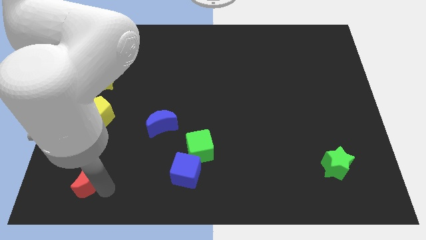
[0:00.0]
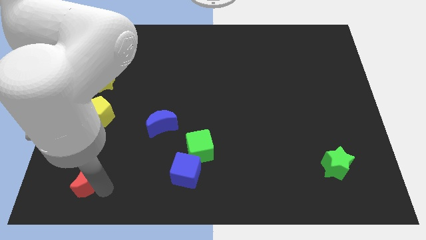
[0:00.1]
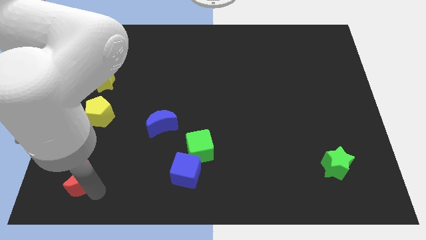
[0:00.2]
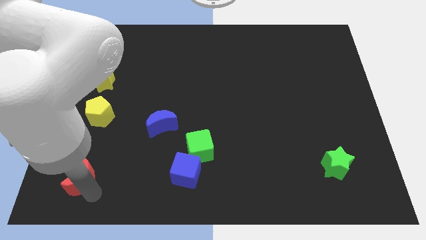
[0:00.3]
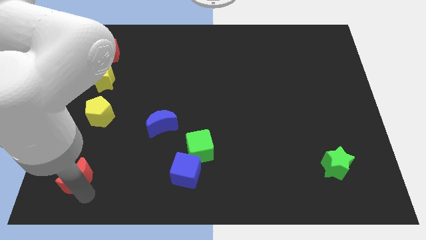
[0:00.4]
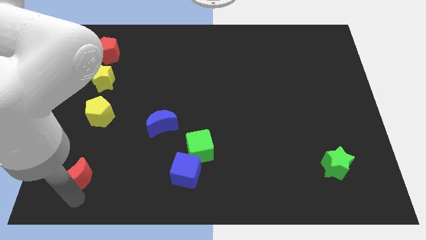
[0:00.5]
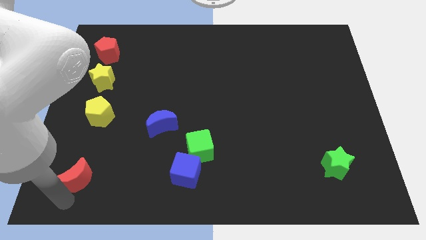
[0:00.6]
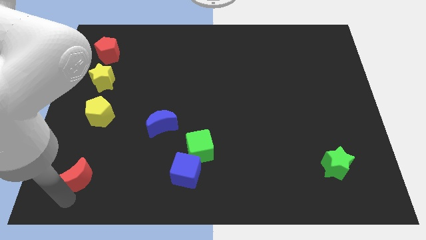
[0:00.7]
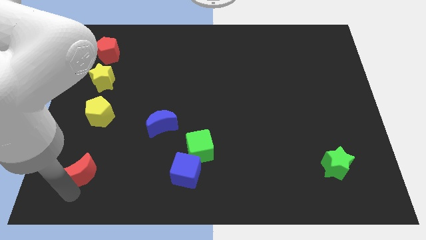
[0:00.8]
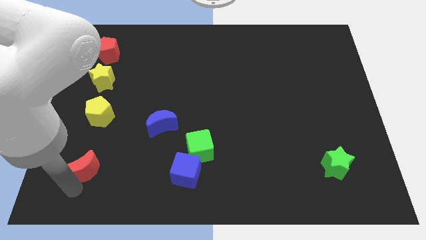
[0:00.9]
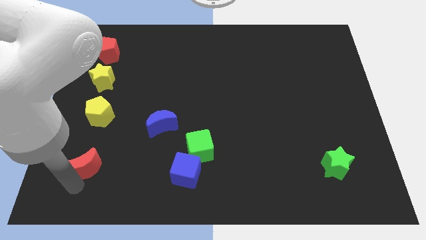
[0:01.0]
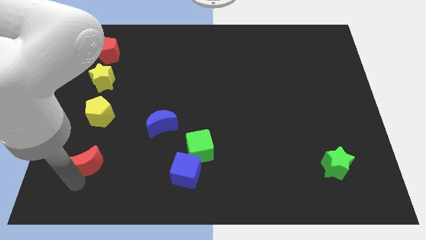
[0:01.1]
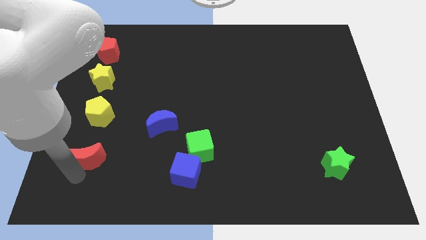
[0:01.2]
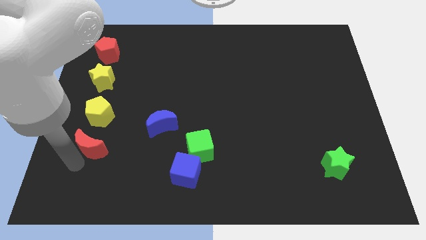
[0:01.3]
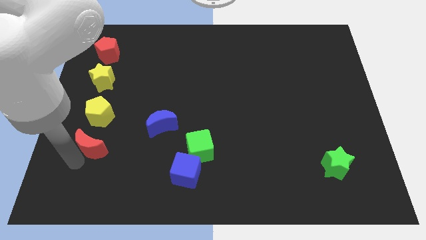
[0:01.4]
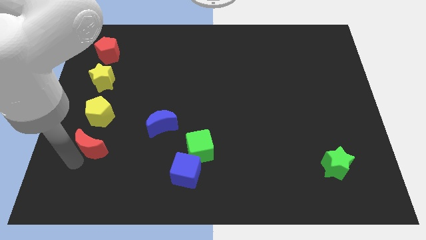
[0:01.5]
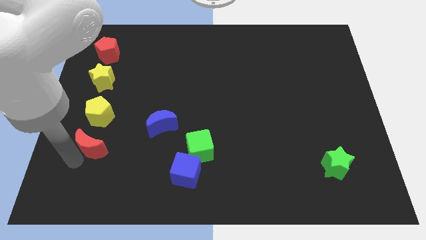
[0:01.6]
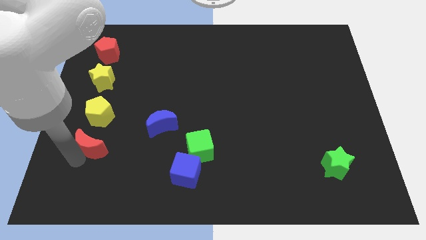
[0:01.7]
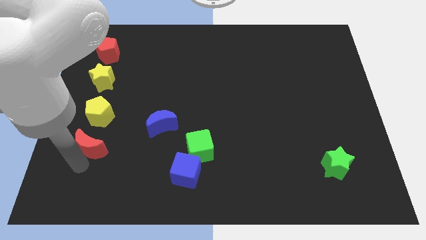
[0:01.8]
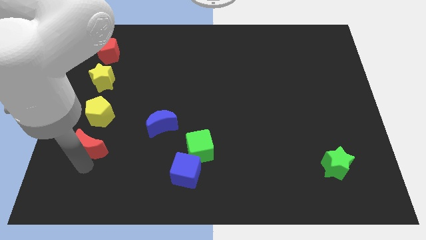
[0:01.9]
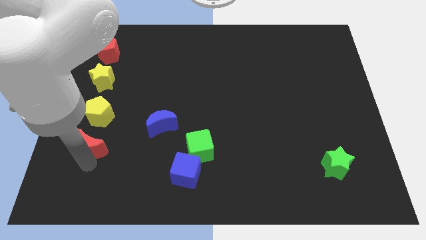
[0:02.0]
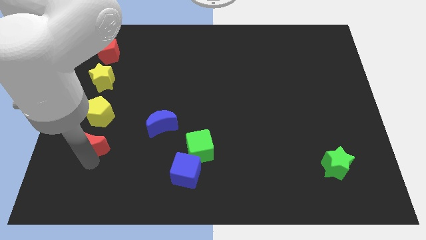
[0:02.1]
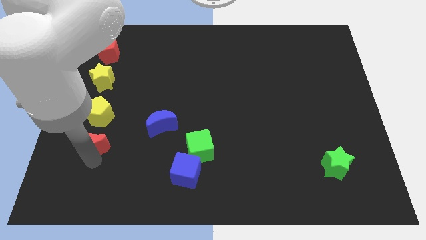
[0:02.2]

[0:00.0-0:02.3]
move the red moon below the yellow pentagon

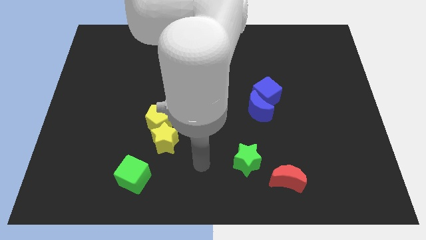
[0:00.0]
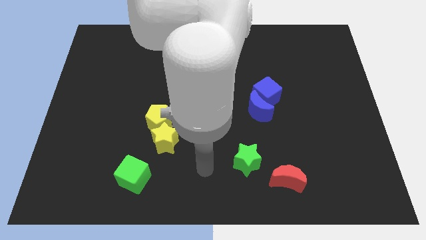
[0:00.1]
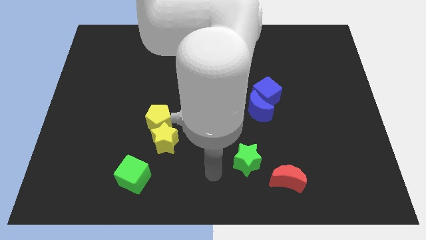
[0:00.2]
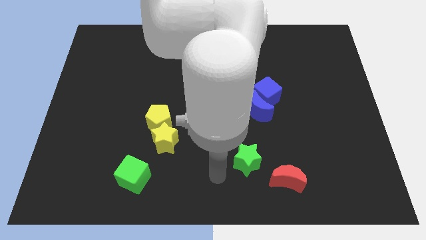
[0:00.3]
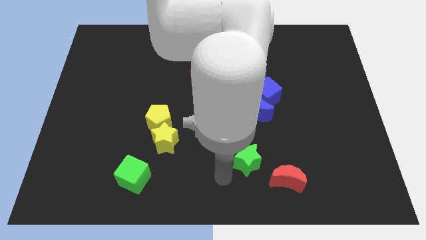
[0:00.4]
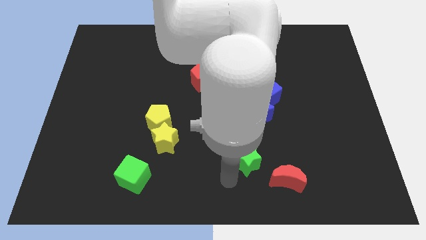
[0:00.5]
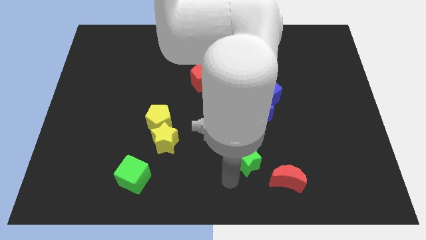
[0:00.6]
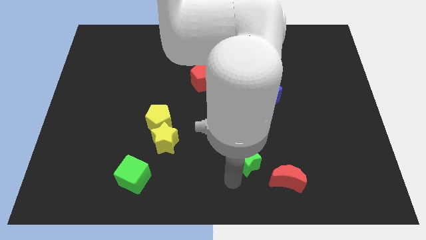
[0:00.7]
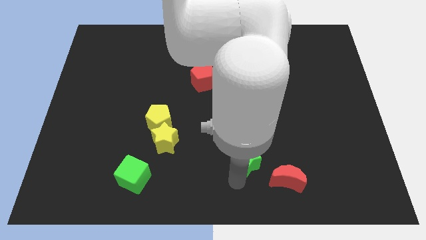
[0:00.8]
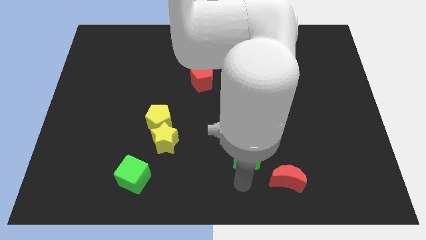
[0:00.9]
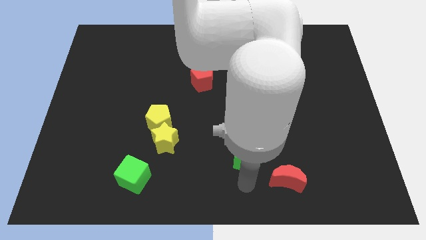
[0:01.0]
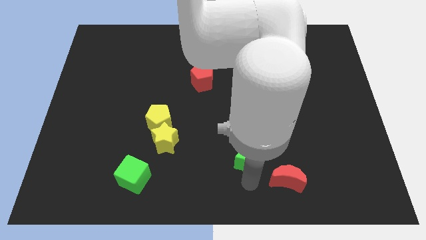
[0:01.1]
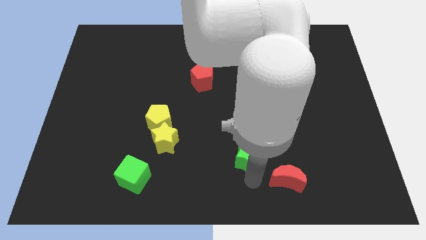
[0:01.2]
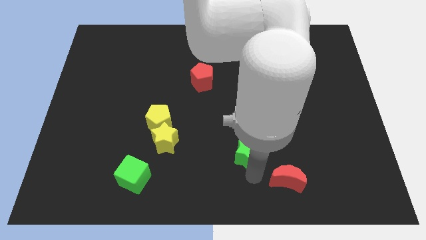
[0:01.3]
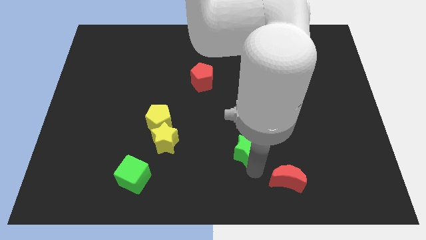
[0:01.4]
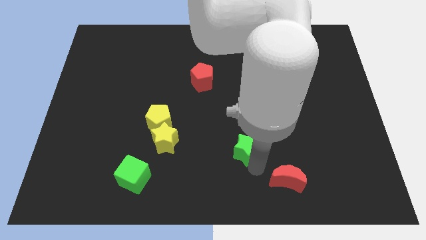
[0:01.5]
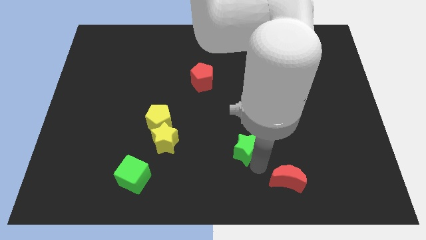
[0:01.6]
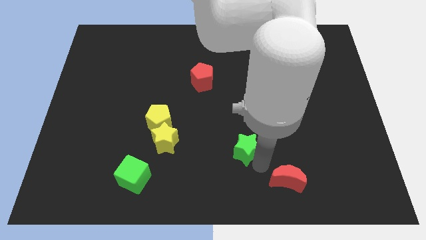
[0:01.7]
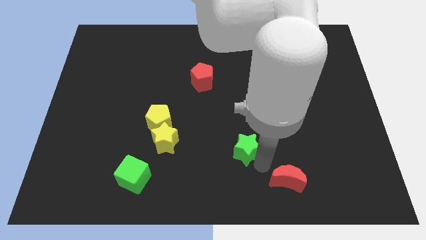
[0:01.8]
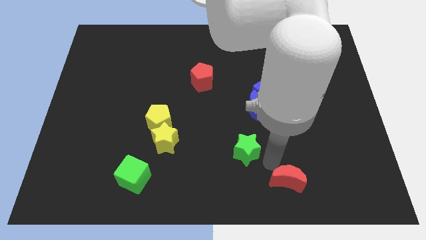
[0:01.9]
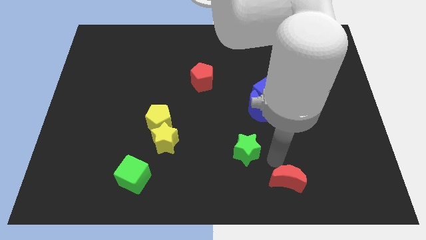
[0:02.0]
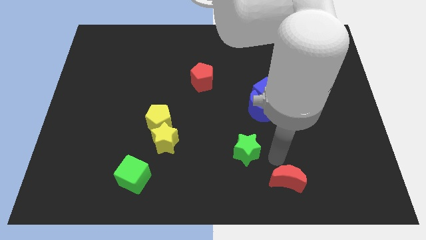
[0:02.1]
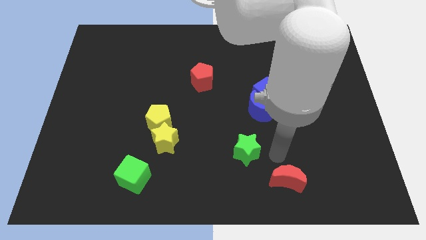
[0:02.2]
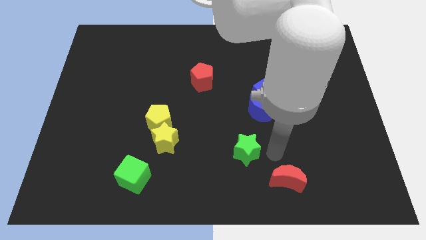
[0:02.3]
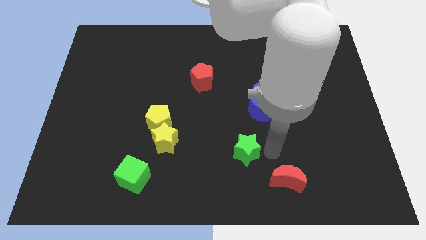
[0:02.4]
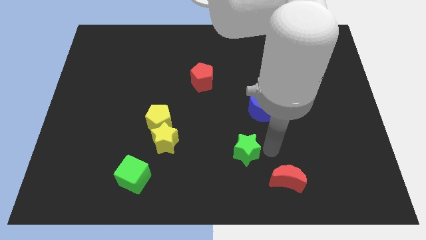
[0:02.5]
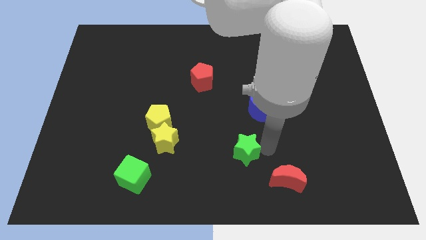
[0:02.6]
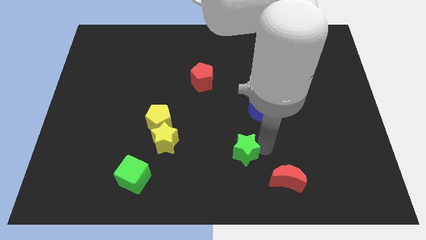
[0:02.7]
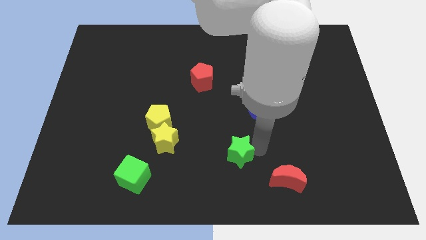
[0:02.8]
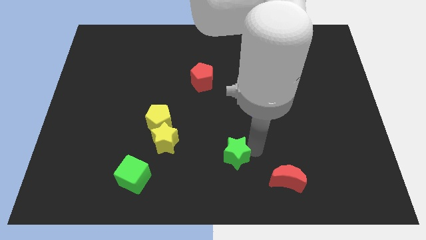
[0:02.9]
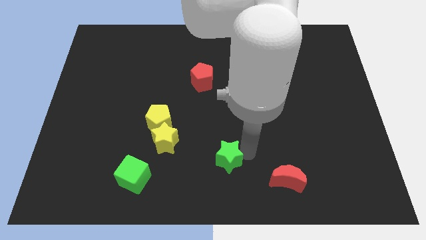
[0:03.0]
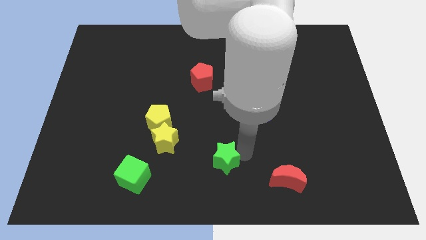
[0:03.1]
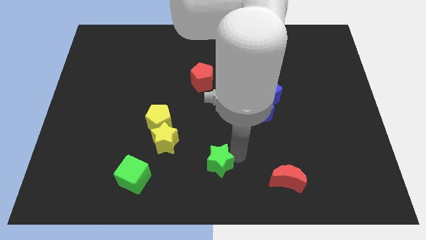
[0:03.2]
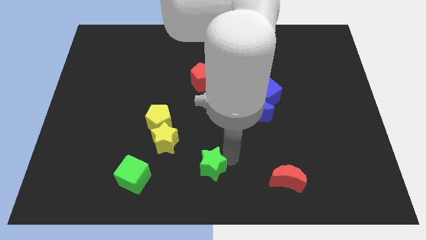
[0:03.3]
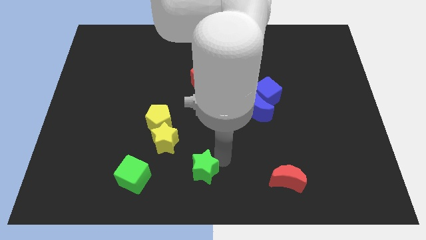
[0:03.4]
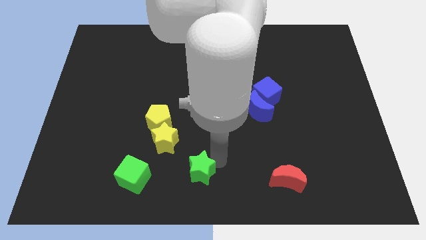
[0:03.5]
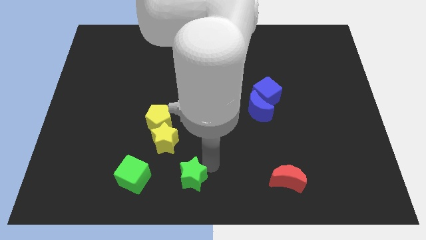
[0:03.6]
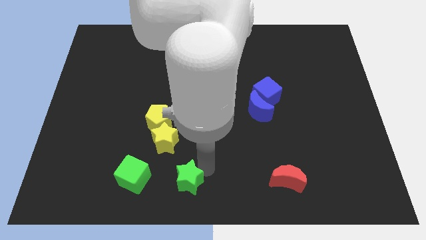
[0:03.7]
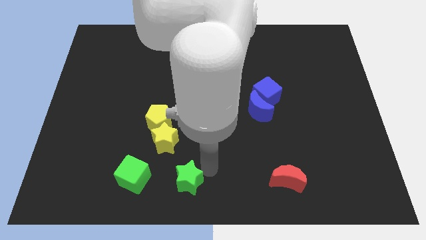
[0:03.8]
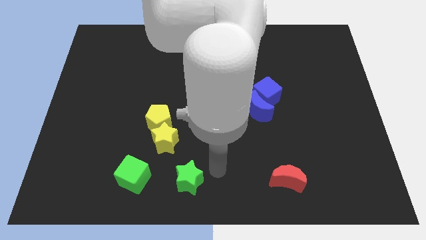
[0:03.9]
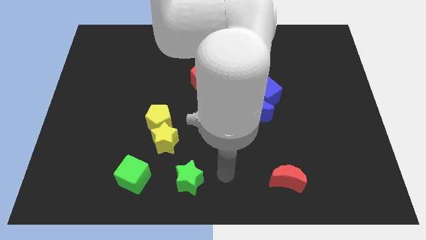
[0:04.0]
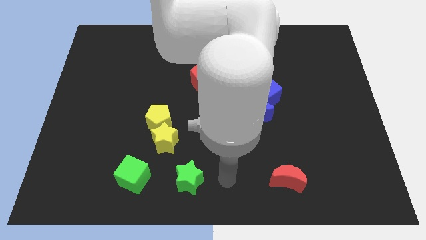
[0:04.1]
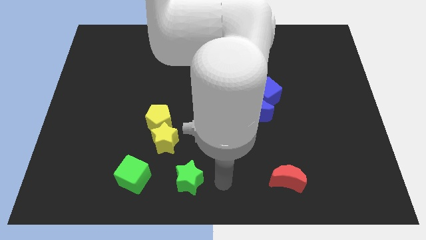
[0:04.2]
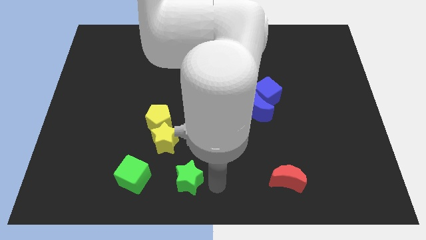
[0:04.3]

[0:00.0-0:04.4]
place the green star left to the red moon

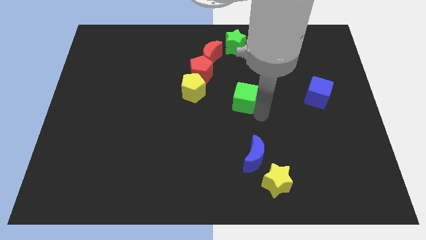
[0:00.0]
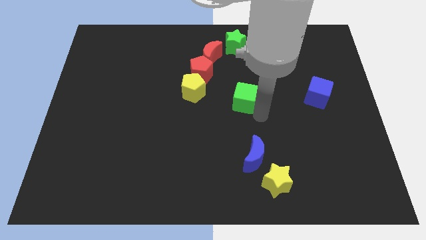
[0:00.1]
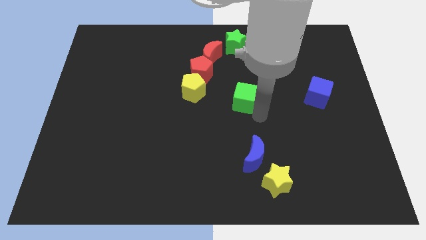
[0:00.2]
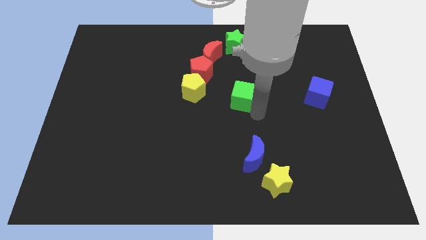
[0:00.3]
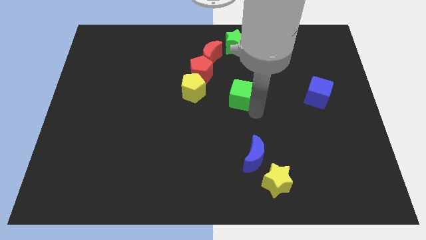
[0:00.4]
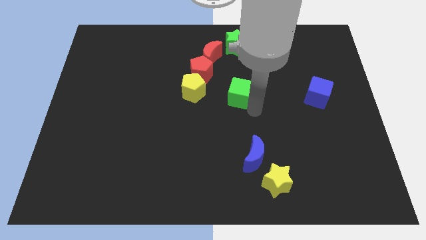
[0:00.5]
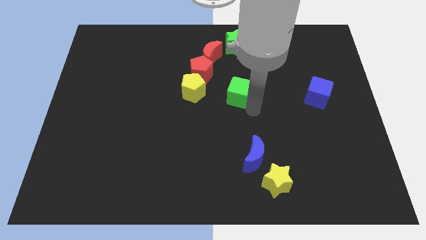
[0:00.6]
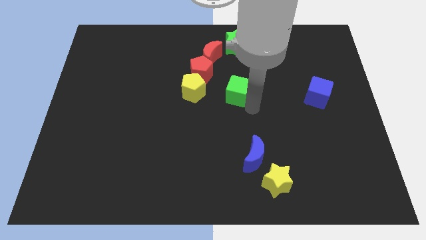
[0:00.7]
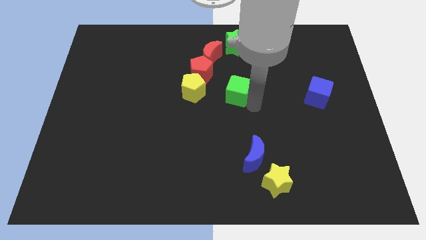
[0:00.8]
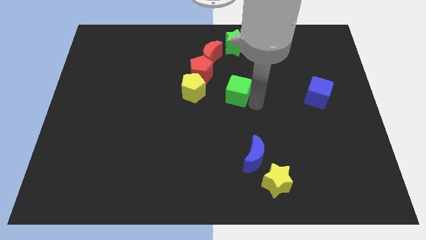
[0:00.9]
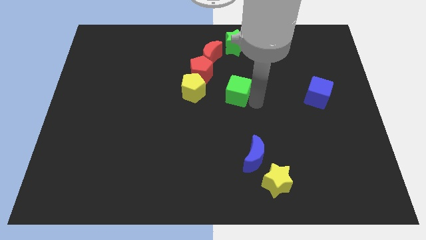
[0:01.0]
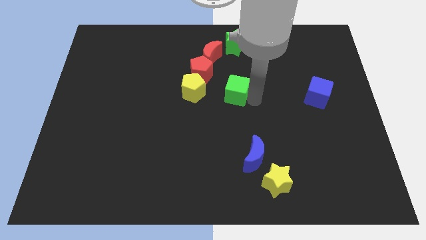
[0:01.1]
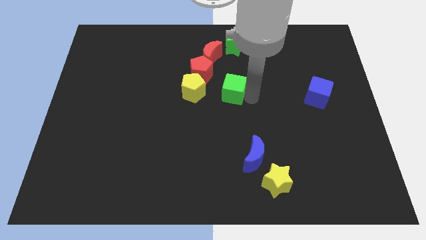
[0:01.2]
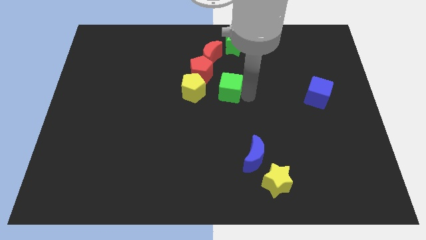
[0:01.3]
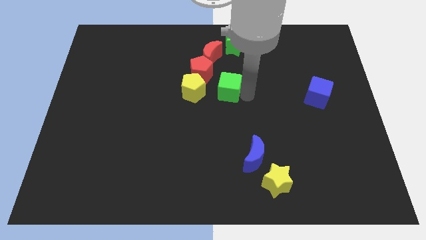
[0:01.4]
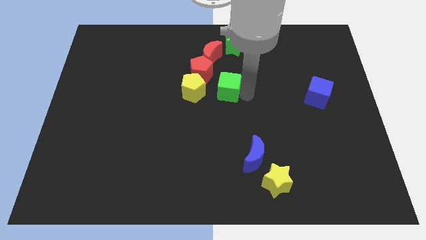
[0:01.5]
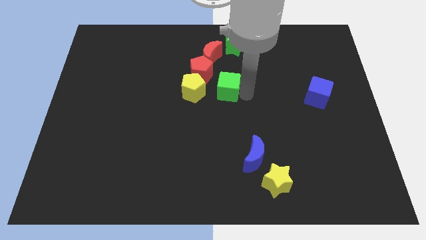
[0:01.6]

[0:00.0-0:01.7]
move the green cube to the center of the board

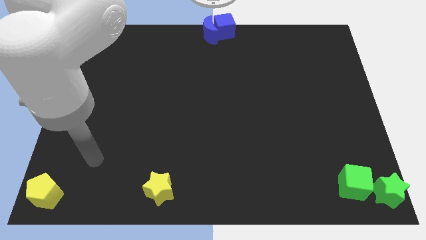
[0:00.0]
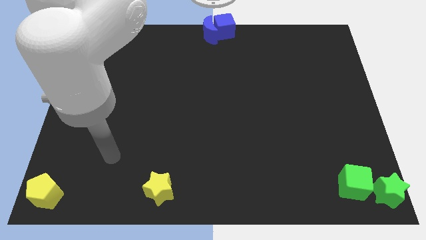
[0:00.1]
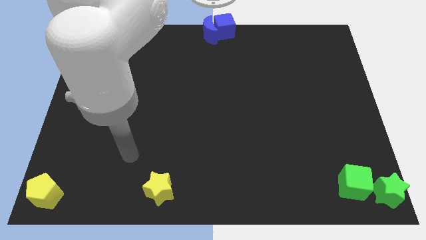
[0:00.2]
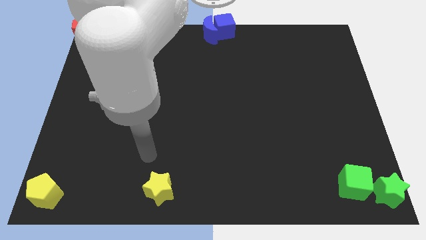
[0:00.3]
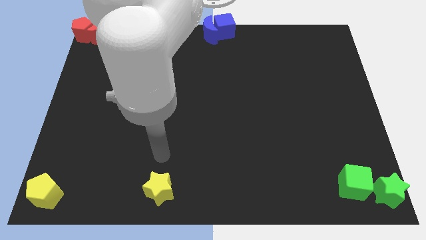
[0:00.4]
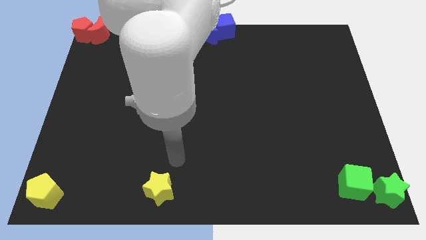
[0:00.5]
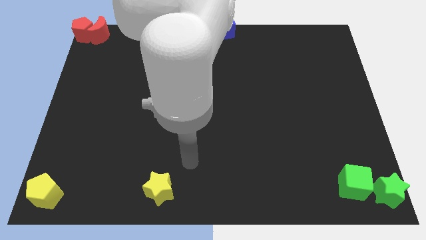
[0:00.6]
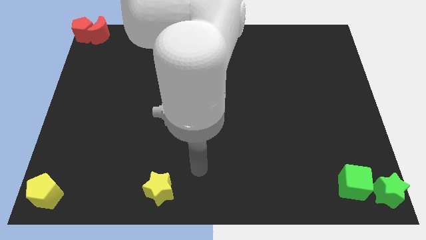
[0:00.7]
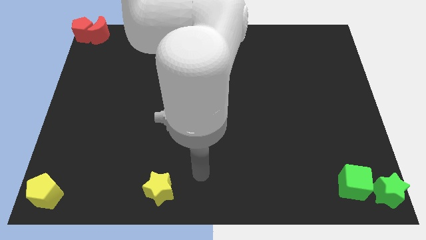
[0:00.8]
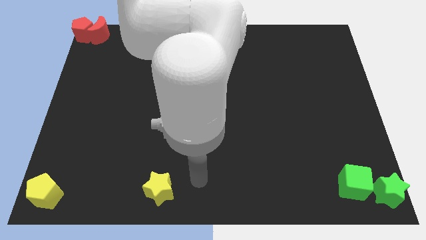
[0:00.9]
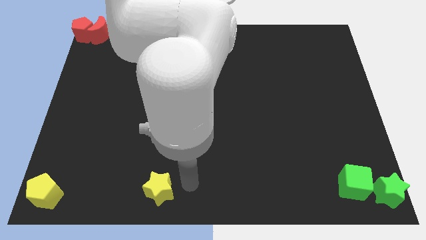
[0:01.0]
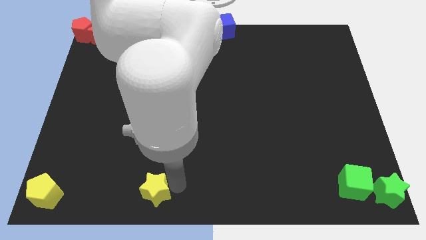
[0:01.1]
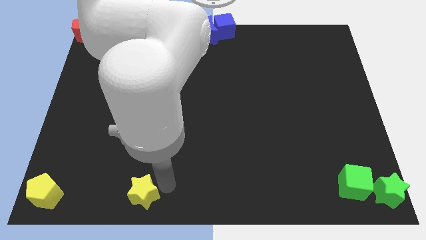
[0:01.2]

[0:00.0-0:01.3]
move your arm right to the yellow star
